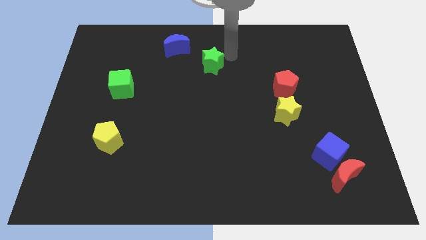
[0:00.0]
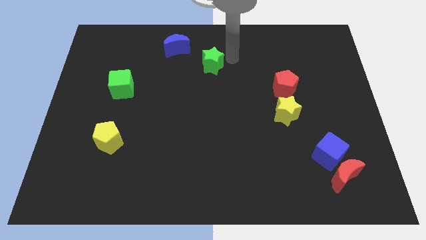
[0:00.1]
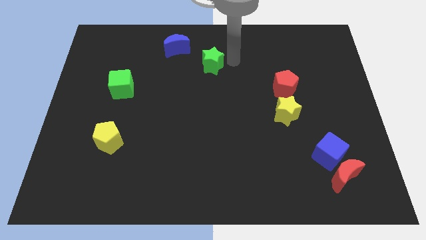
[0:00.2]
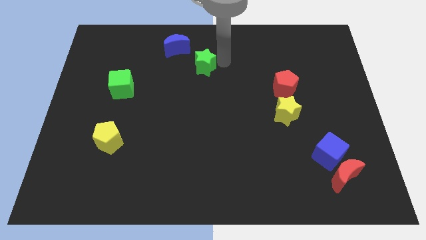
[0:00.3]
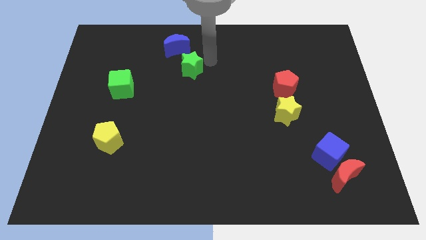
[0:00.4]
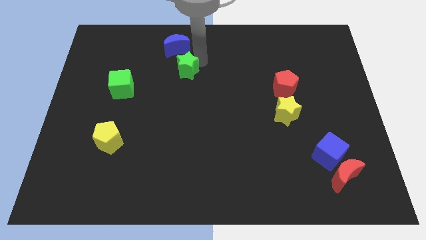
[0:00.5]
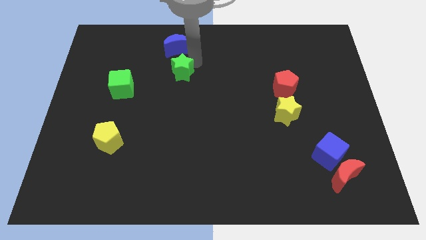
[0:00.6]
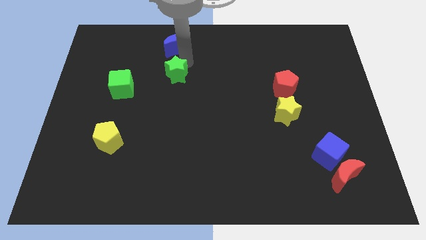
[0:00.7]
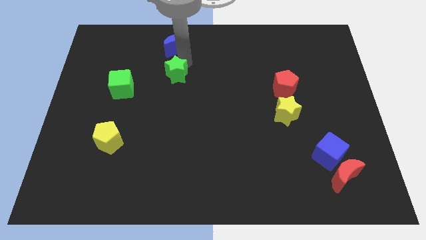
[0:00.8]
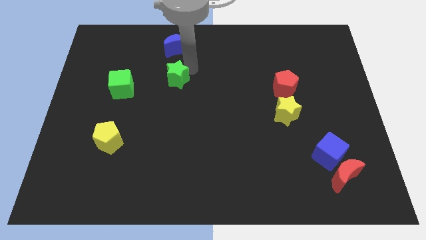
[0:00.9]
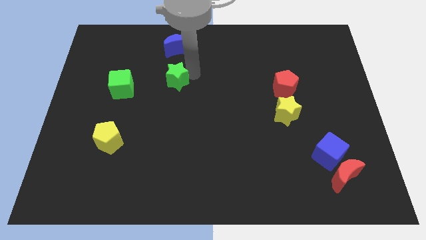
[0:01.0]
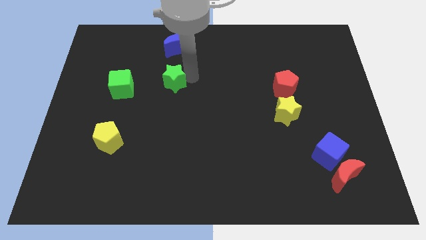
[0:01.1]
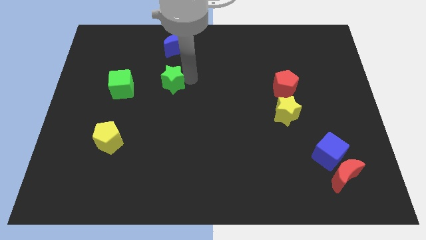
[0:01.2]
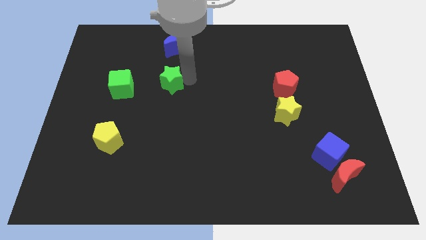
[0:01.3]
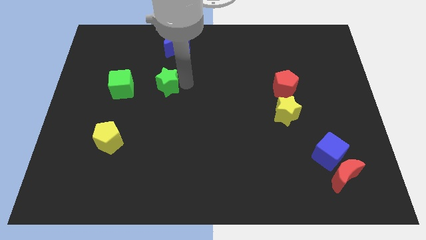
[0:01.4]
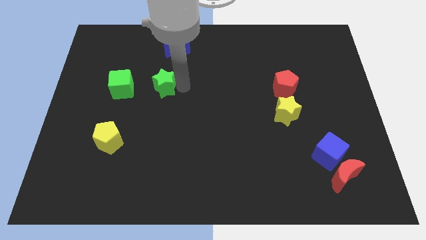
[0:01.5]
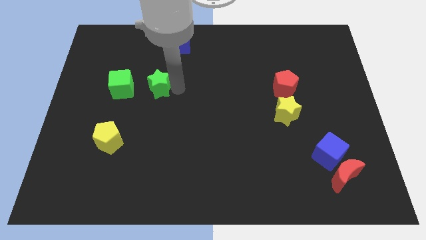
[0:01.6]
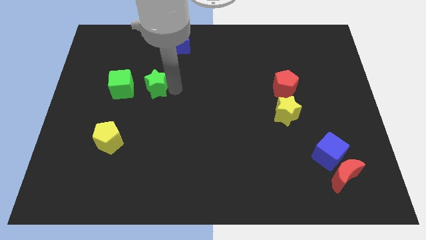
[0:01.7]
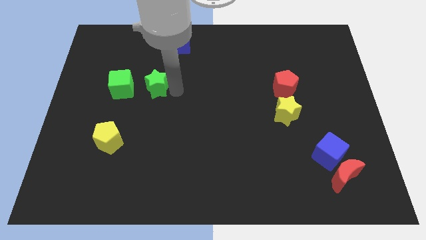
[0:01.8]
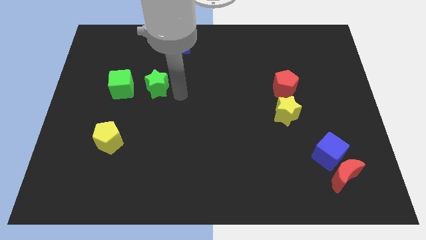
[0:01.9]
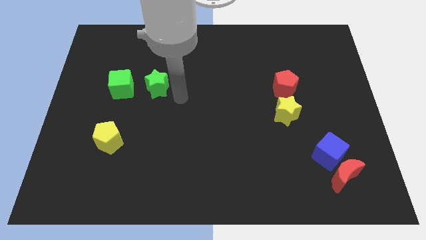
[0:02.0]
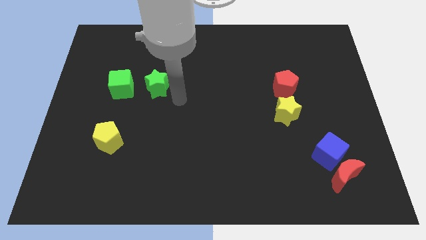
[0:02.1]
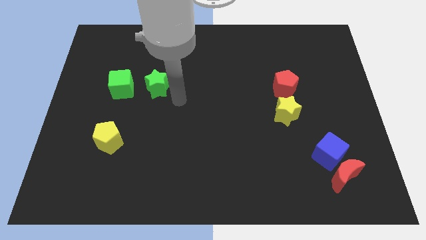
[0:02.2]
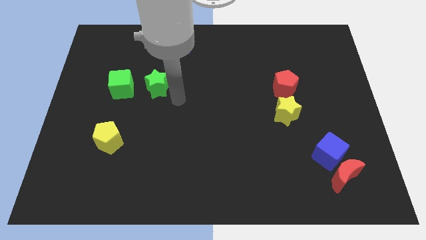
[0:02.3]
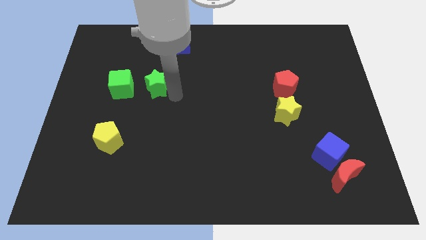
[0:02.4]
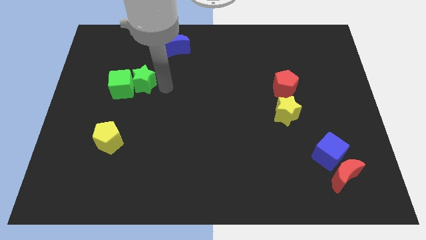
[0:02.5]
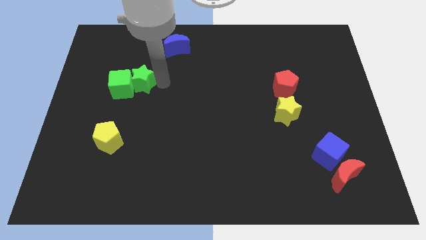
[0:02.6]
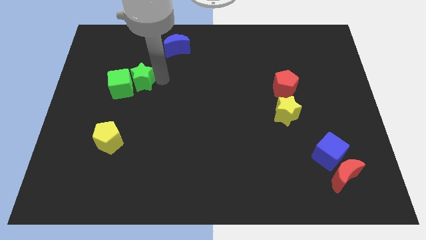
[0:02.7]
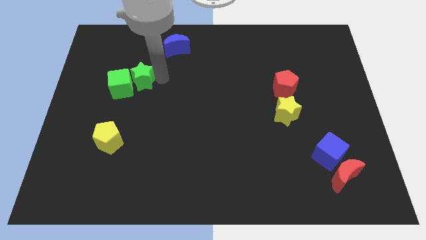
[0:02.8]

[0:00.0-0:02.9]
place green star beside green cube

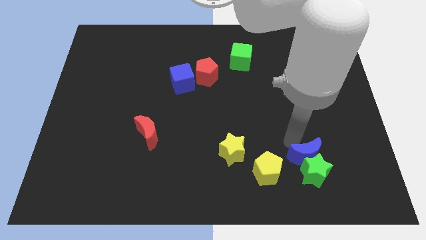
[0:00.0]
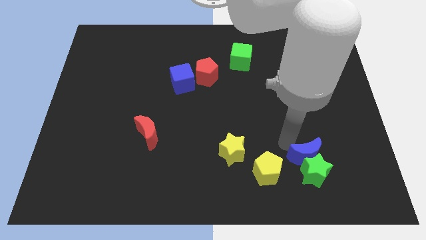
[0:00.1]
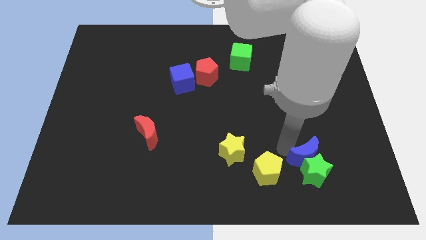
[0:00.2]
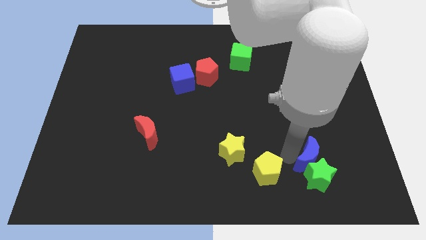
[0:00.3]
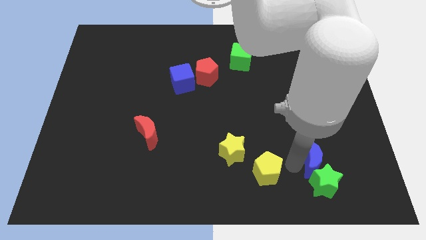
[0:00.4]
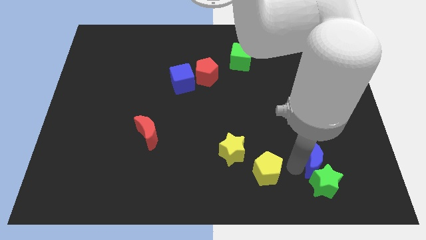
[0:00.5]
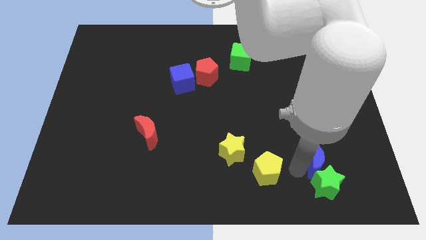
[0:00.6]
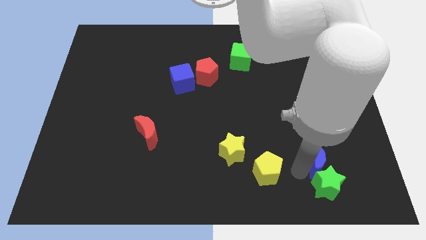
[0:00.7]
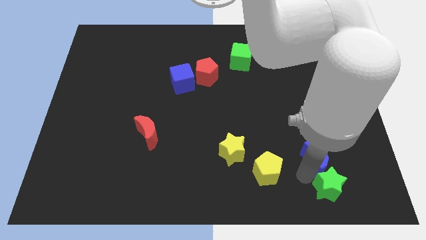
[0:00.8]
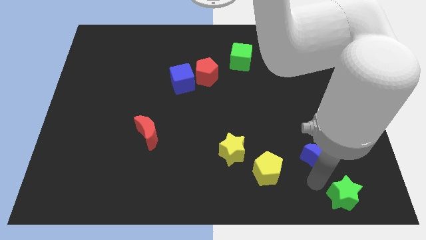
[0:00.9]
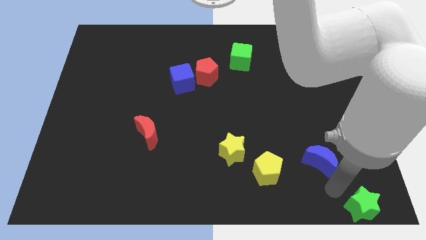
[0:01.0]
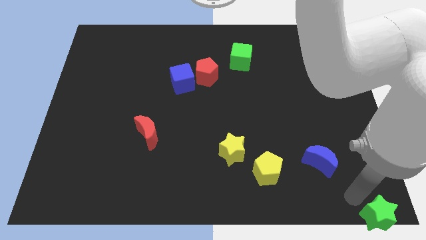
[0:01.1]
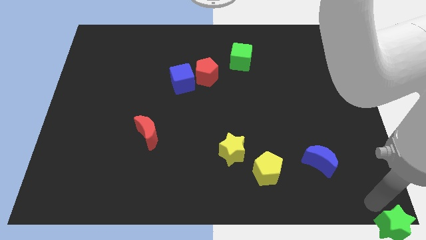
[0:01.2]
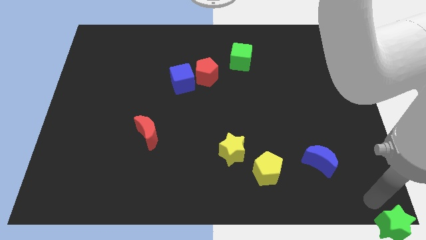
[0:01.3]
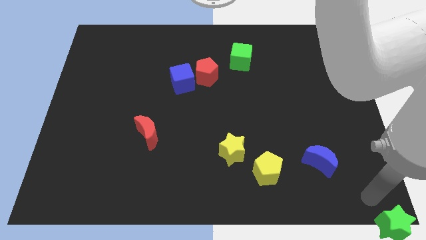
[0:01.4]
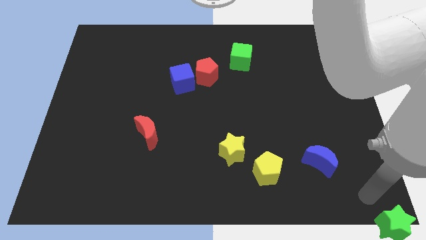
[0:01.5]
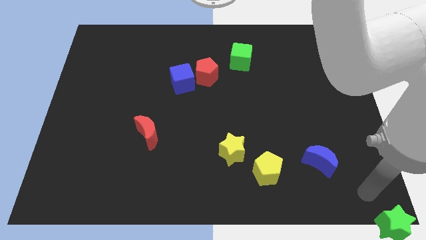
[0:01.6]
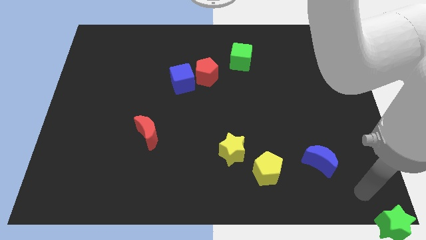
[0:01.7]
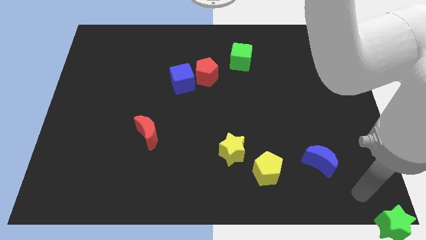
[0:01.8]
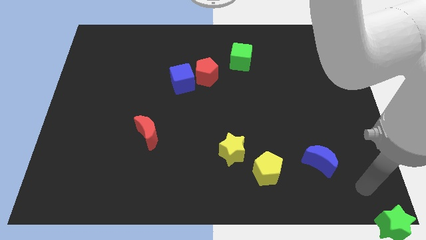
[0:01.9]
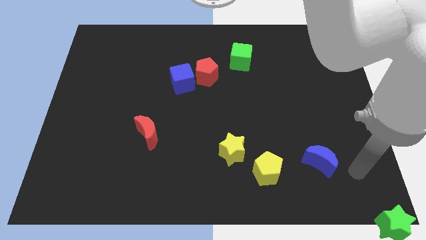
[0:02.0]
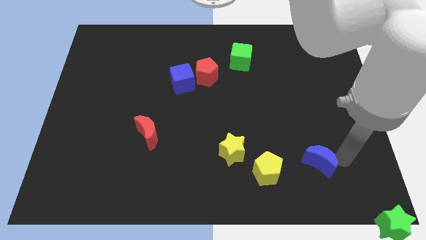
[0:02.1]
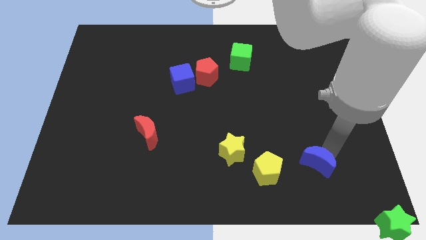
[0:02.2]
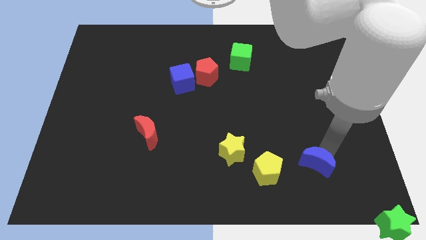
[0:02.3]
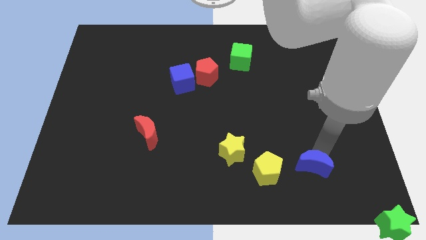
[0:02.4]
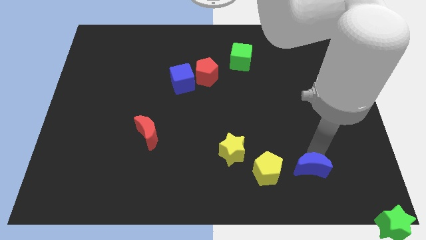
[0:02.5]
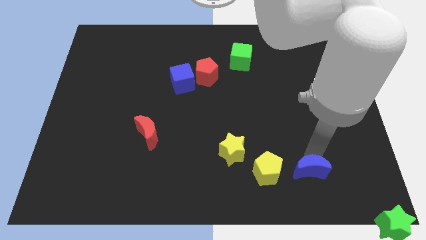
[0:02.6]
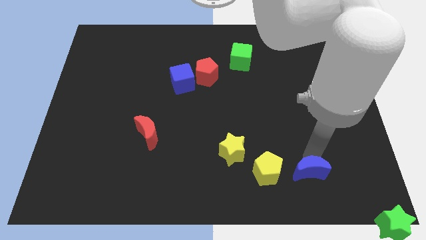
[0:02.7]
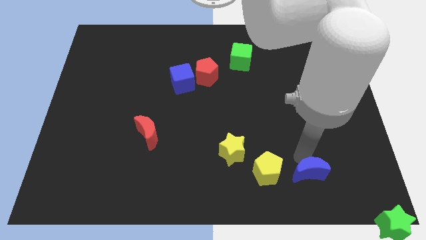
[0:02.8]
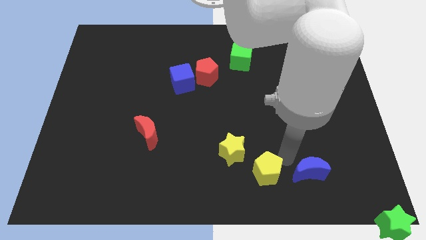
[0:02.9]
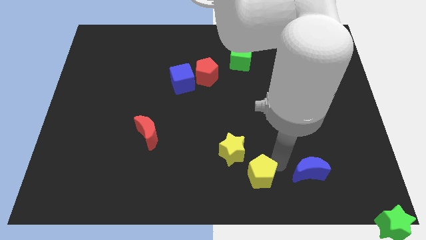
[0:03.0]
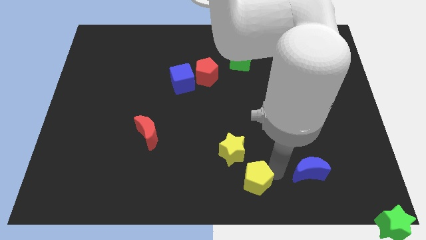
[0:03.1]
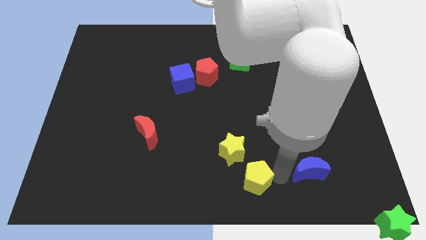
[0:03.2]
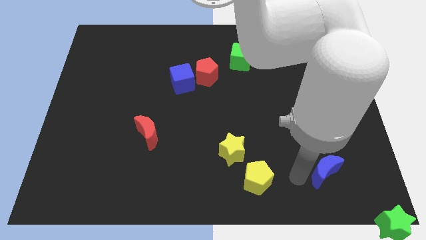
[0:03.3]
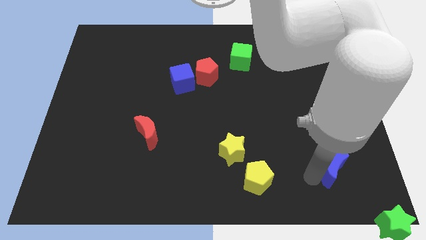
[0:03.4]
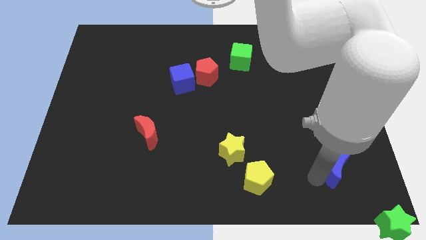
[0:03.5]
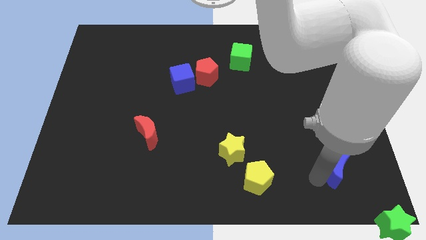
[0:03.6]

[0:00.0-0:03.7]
push the green star and blue crescent diagonal to each other

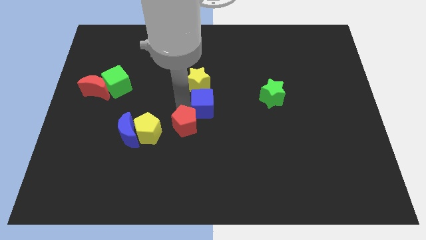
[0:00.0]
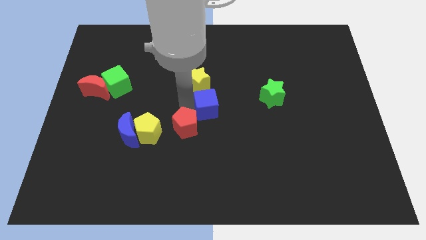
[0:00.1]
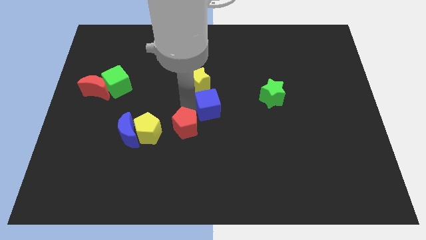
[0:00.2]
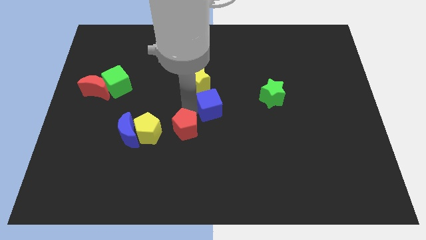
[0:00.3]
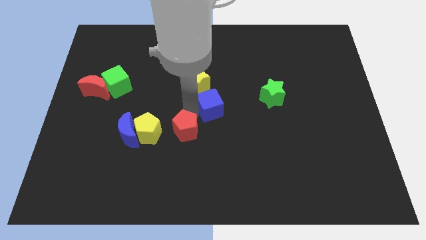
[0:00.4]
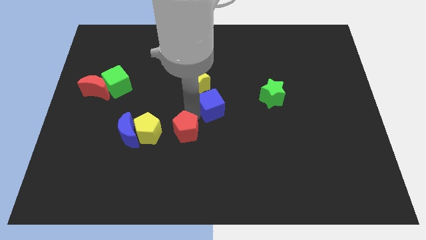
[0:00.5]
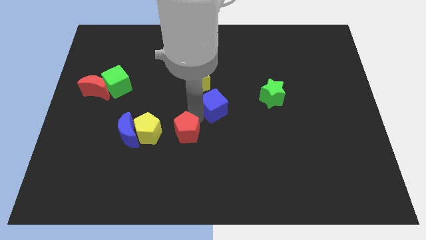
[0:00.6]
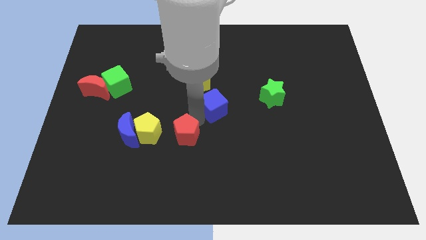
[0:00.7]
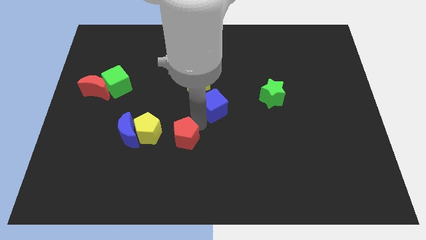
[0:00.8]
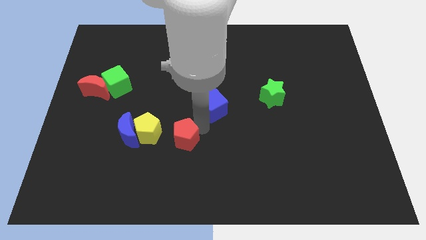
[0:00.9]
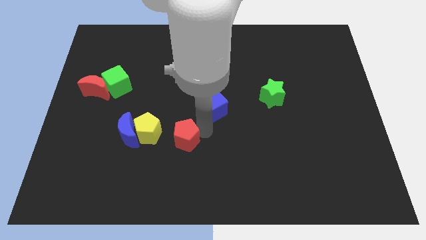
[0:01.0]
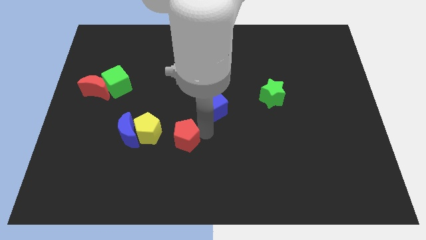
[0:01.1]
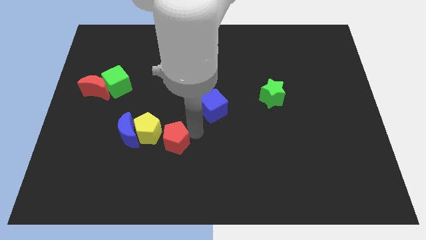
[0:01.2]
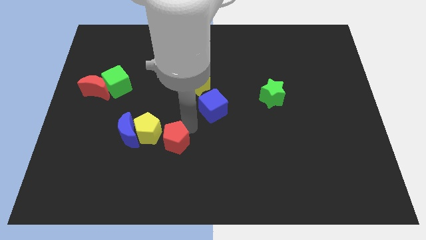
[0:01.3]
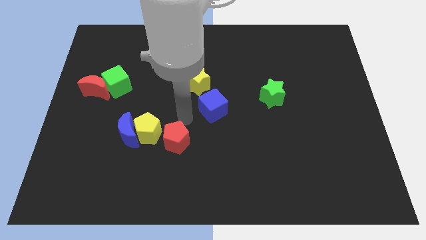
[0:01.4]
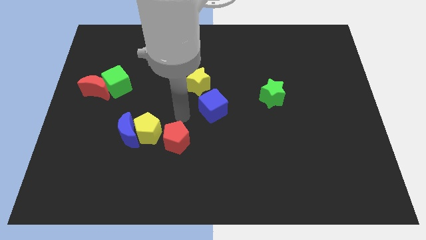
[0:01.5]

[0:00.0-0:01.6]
separate the red pentagon from the blue cube

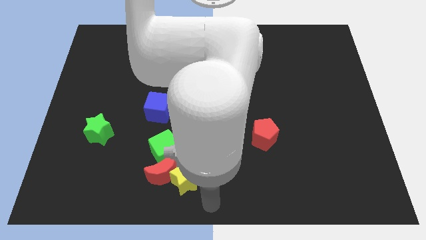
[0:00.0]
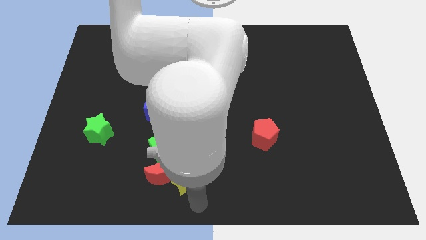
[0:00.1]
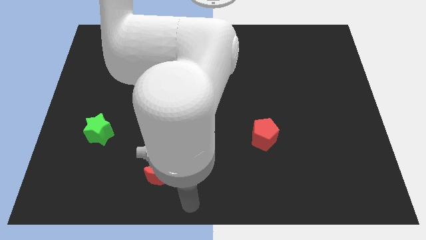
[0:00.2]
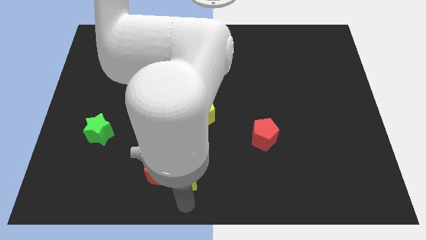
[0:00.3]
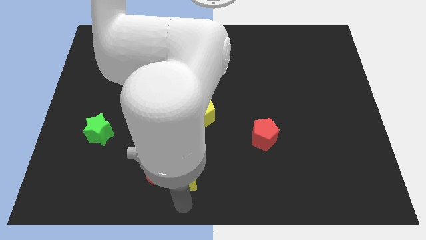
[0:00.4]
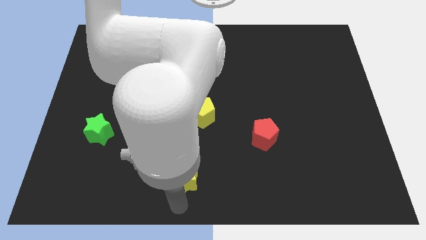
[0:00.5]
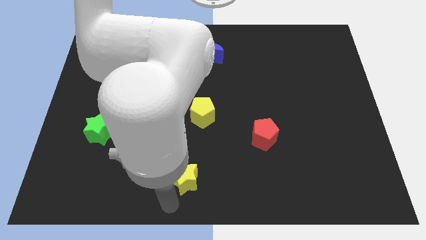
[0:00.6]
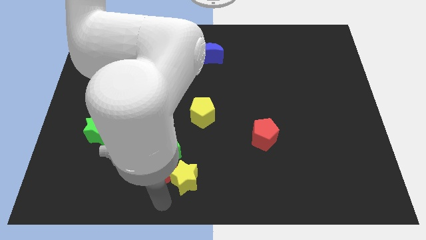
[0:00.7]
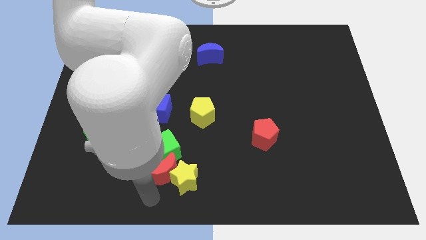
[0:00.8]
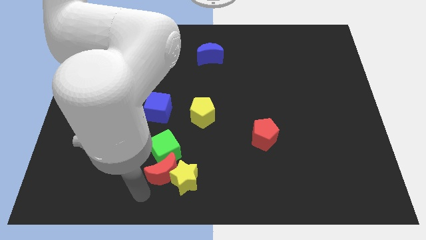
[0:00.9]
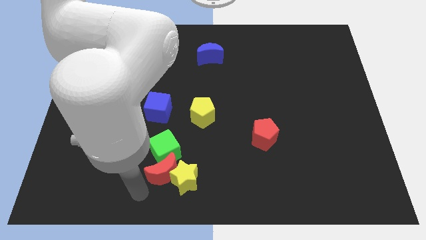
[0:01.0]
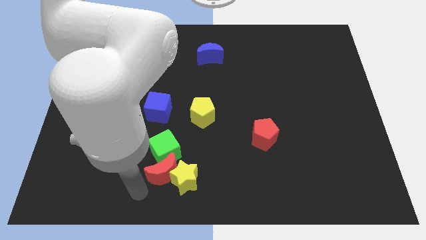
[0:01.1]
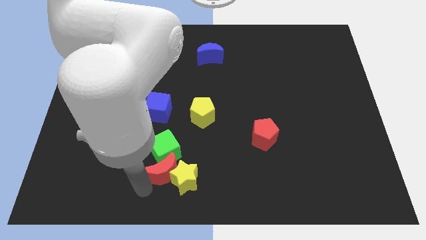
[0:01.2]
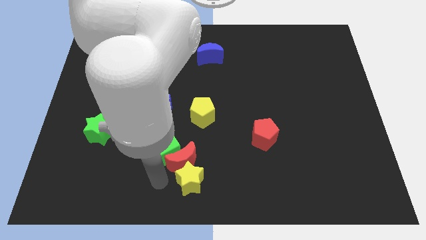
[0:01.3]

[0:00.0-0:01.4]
push the red crescent to the top left side of the yellow star
